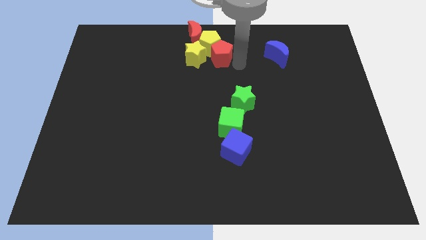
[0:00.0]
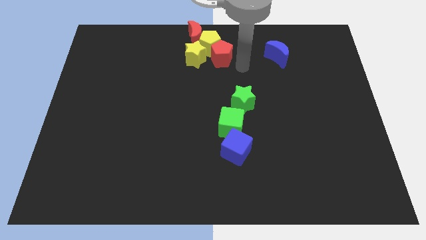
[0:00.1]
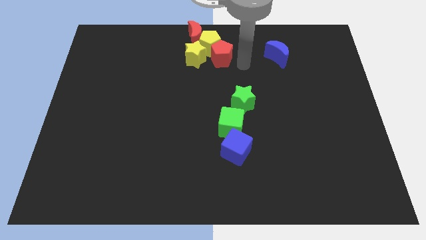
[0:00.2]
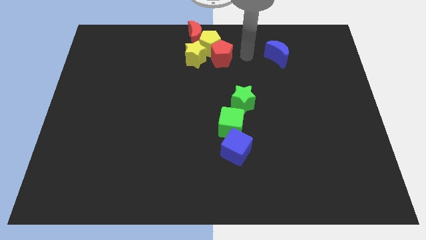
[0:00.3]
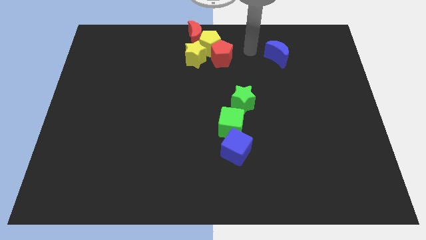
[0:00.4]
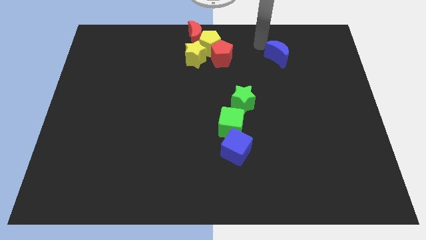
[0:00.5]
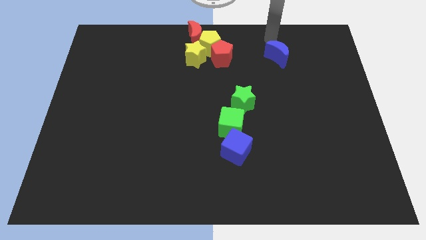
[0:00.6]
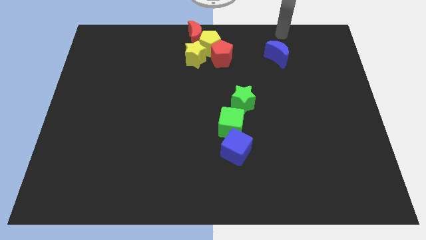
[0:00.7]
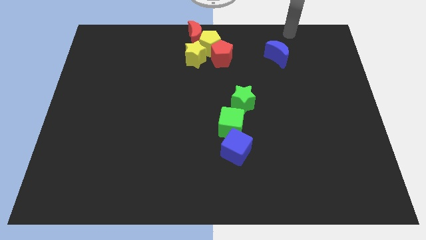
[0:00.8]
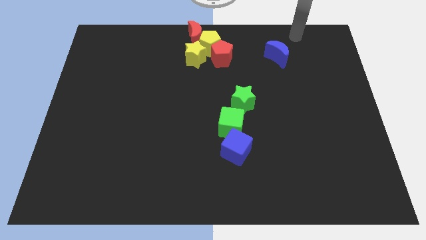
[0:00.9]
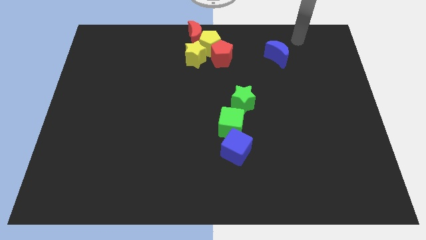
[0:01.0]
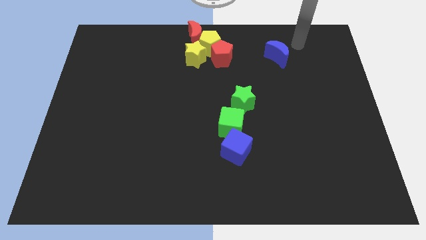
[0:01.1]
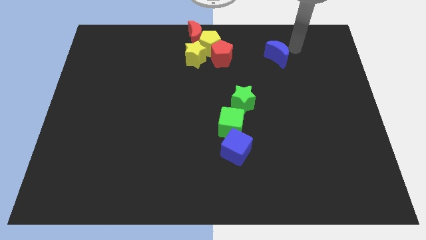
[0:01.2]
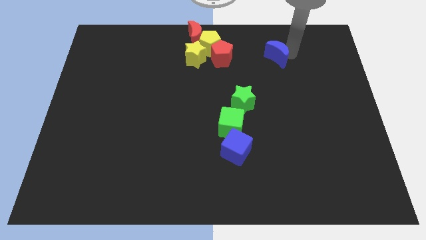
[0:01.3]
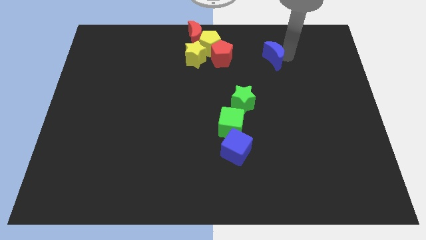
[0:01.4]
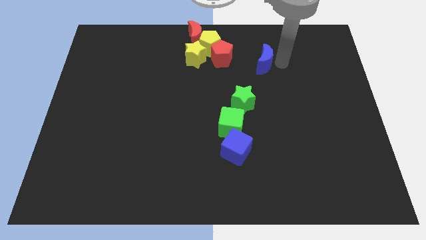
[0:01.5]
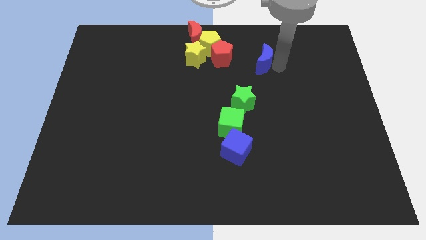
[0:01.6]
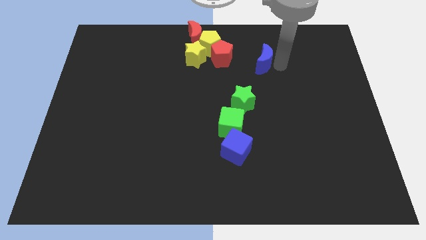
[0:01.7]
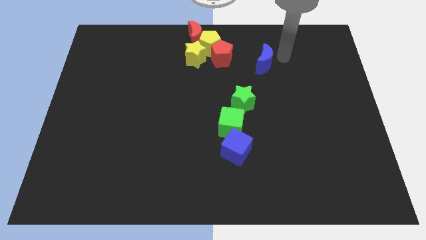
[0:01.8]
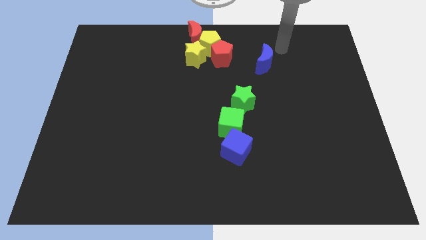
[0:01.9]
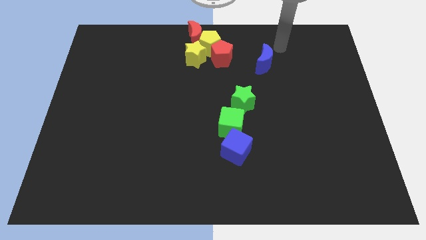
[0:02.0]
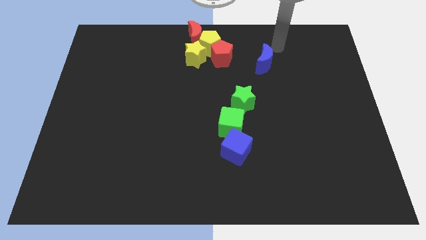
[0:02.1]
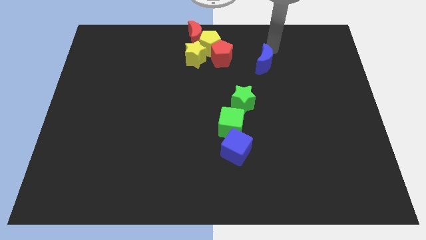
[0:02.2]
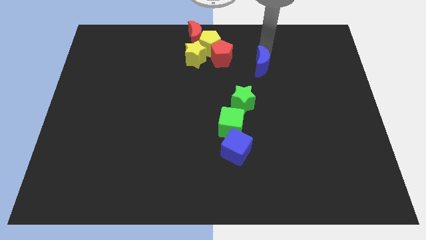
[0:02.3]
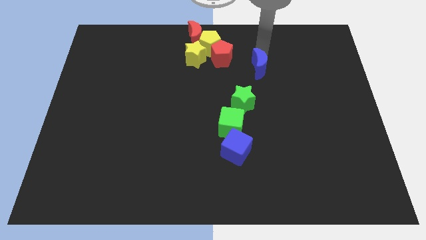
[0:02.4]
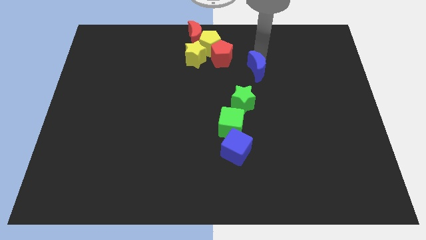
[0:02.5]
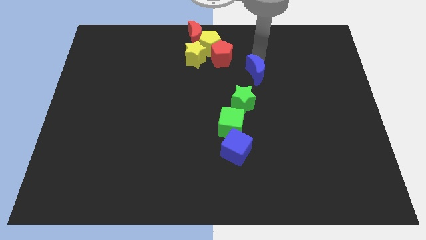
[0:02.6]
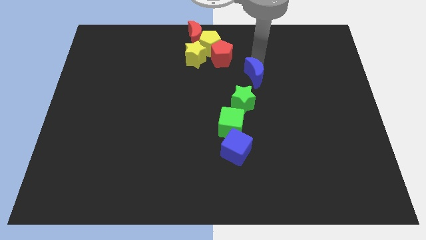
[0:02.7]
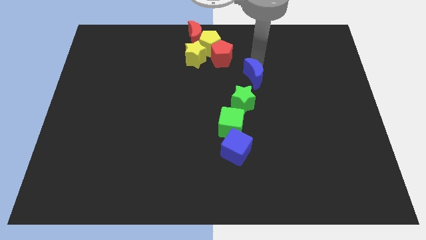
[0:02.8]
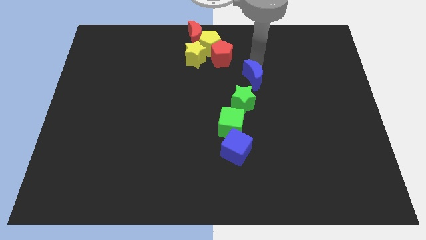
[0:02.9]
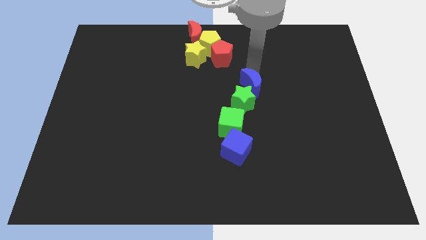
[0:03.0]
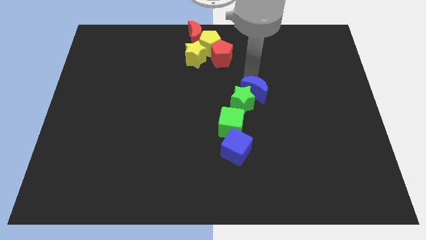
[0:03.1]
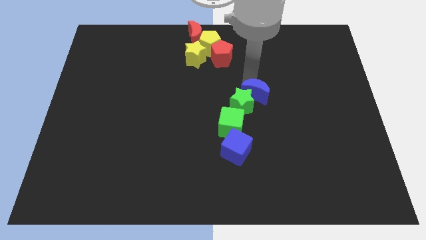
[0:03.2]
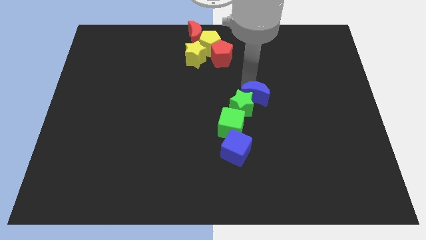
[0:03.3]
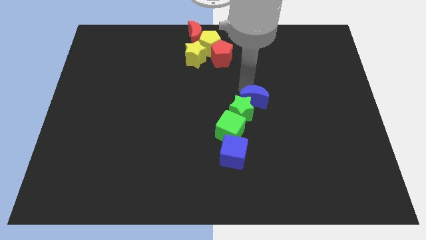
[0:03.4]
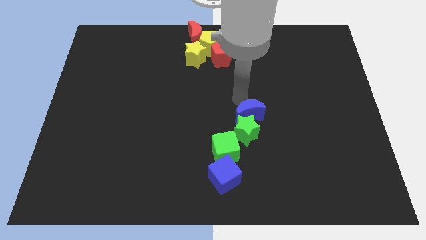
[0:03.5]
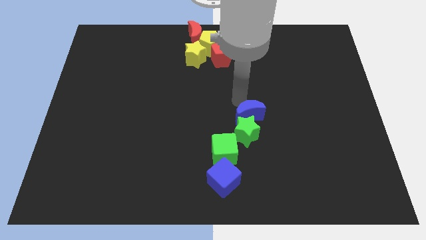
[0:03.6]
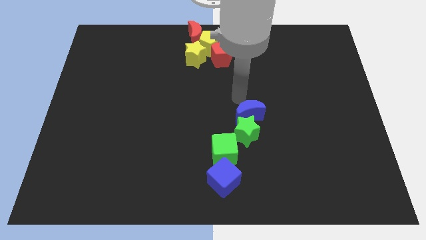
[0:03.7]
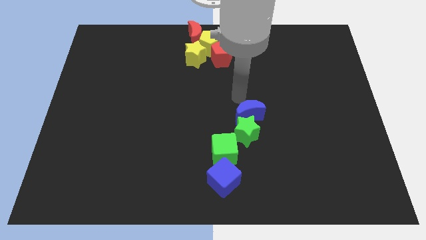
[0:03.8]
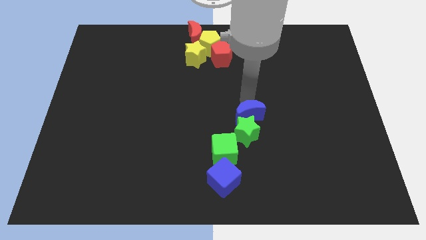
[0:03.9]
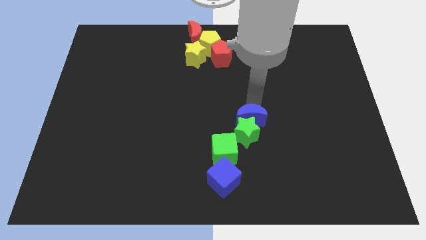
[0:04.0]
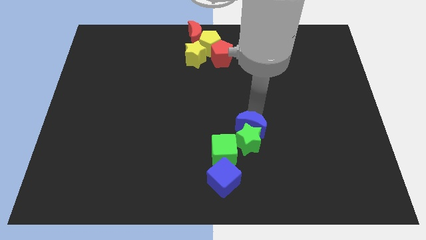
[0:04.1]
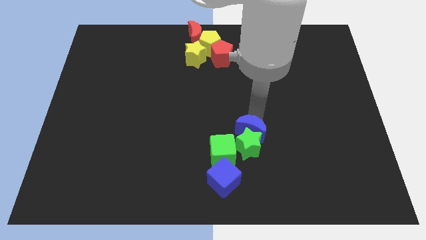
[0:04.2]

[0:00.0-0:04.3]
push the blue moon into the group of blocks

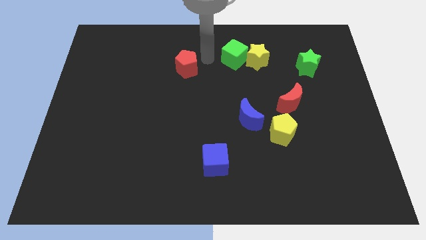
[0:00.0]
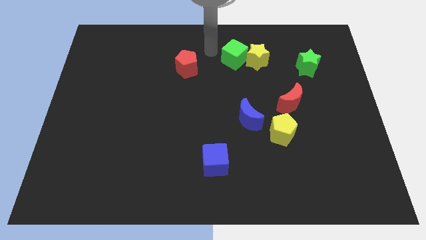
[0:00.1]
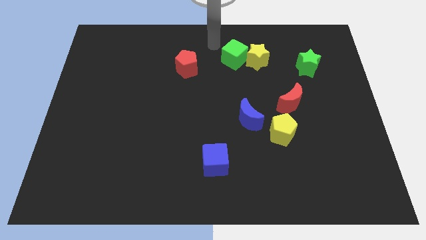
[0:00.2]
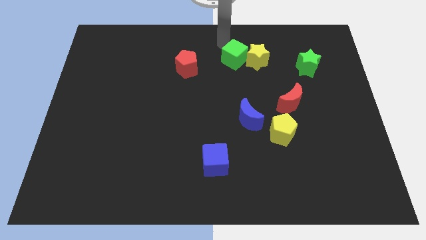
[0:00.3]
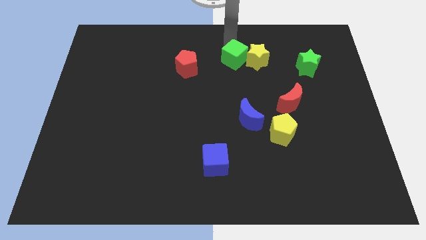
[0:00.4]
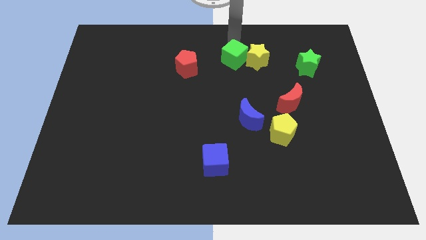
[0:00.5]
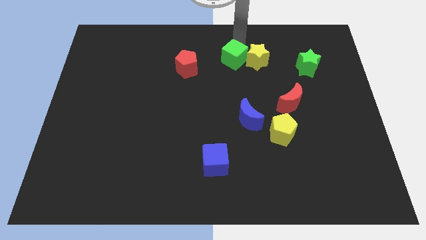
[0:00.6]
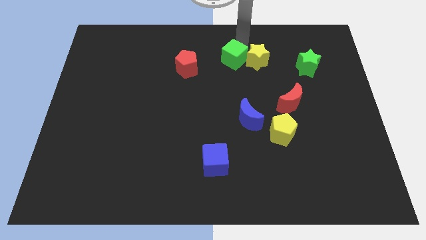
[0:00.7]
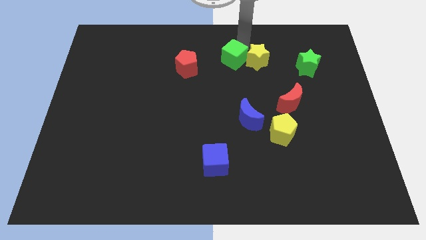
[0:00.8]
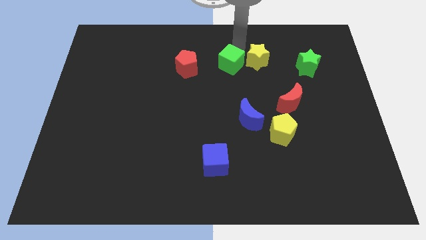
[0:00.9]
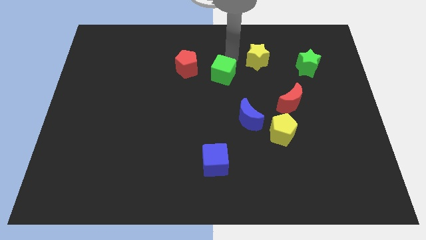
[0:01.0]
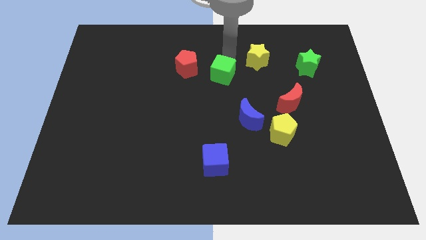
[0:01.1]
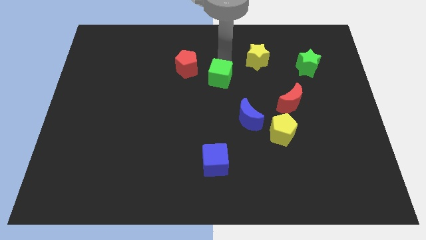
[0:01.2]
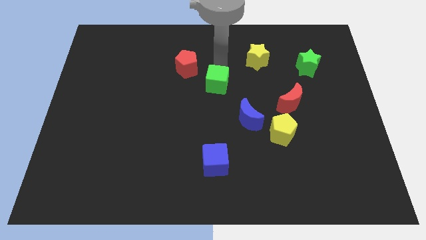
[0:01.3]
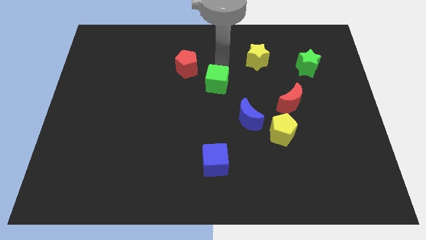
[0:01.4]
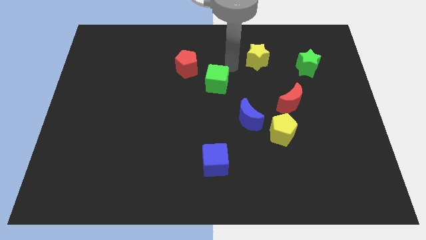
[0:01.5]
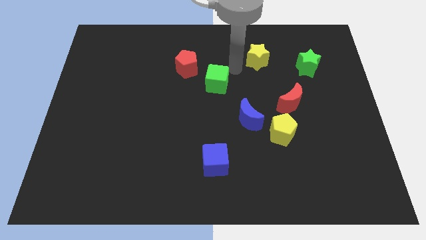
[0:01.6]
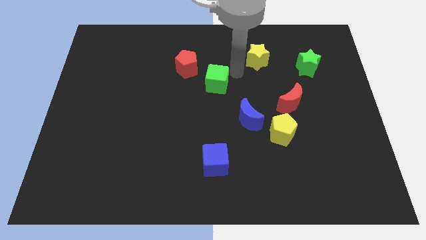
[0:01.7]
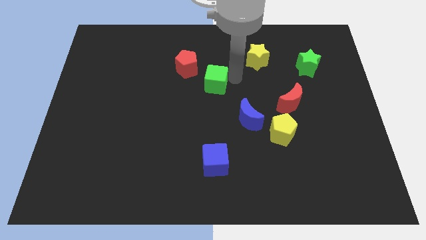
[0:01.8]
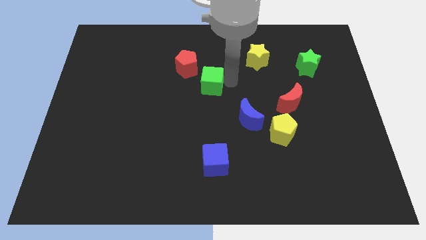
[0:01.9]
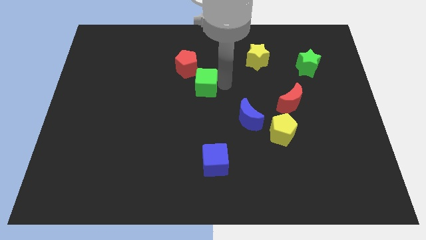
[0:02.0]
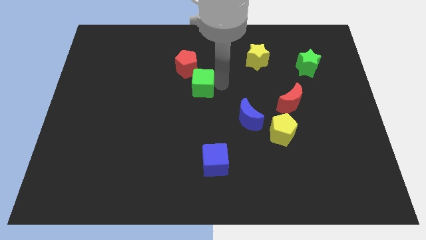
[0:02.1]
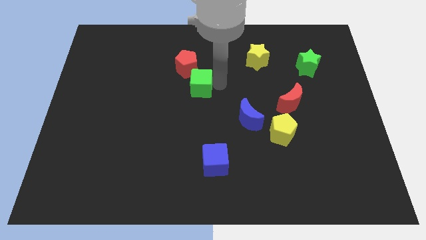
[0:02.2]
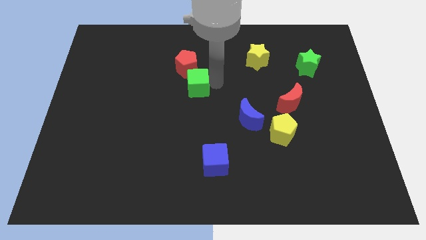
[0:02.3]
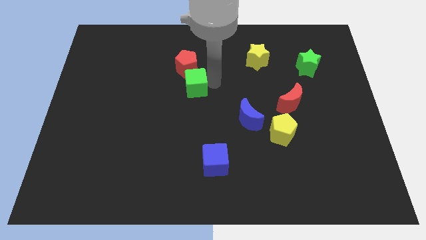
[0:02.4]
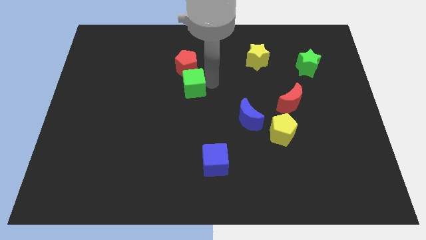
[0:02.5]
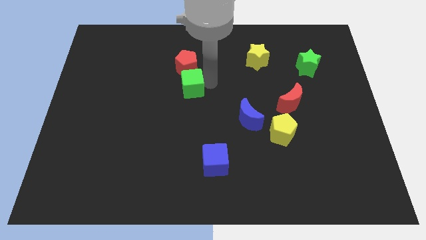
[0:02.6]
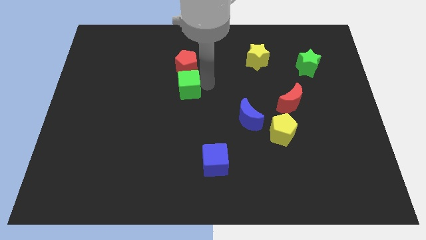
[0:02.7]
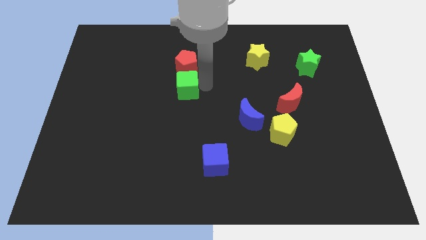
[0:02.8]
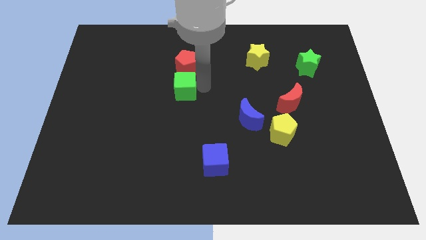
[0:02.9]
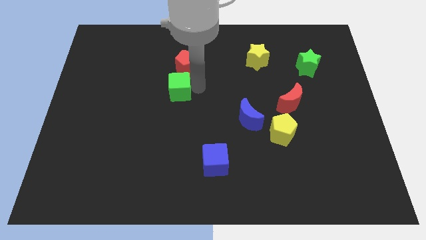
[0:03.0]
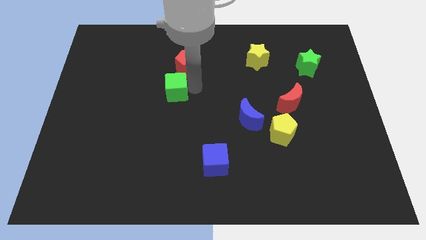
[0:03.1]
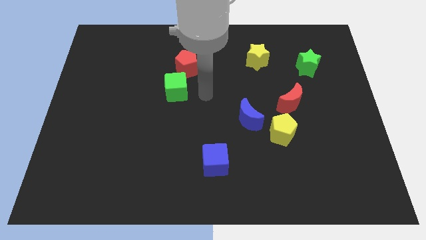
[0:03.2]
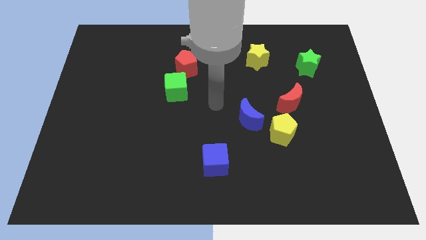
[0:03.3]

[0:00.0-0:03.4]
place green cube to the bottom of the red pentagon

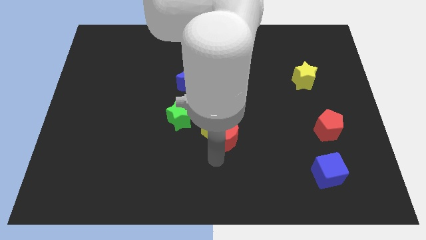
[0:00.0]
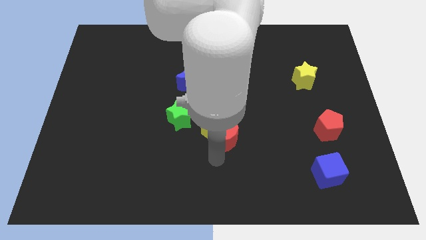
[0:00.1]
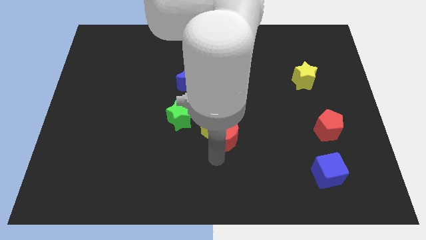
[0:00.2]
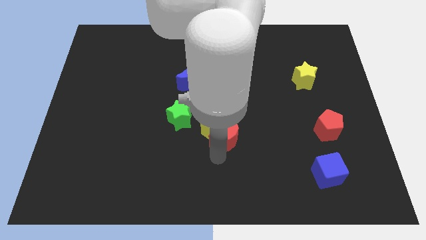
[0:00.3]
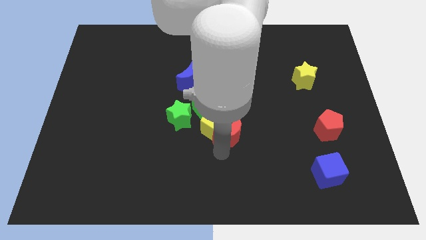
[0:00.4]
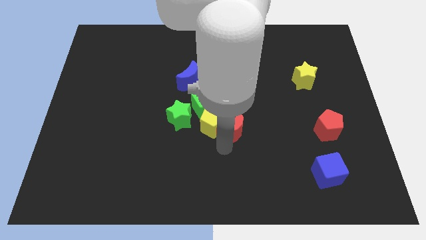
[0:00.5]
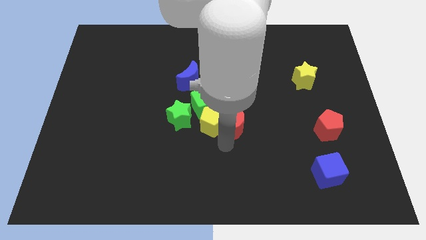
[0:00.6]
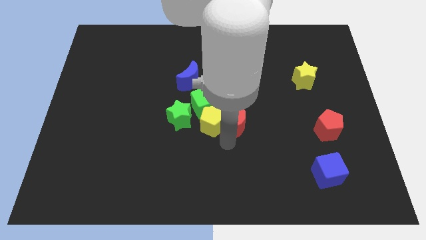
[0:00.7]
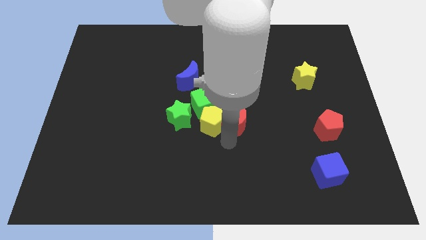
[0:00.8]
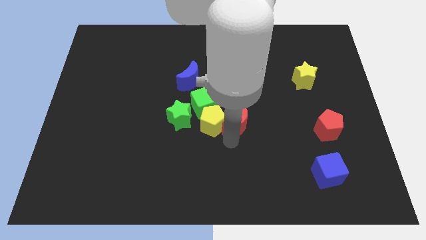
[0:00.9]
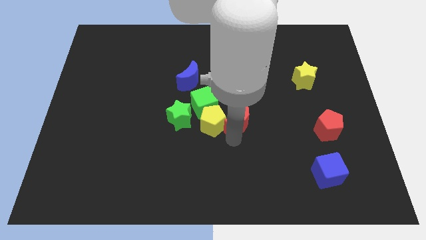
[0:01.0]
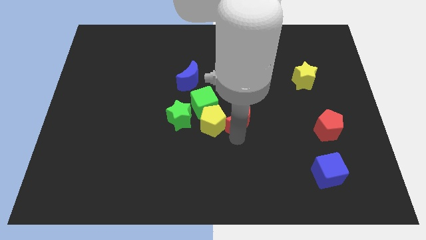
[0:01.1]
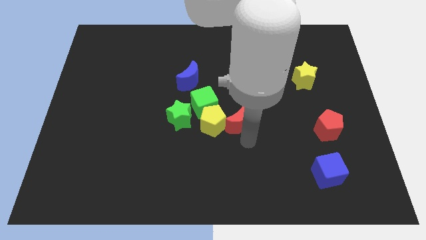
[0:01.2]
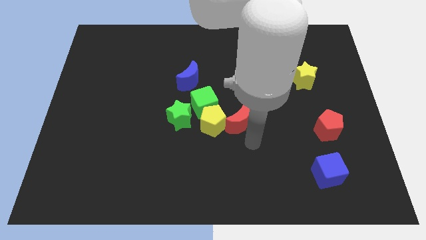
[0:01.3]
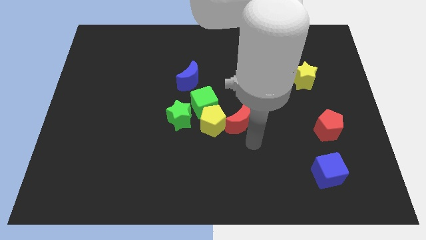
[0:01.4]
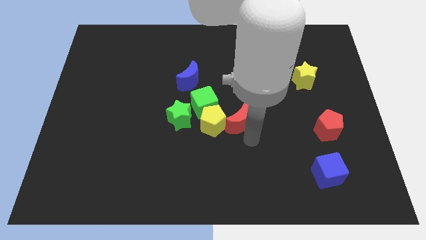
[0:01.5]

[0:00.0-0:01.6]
drag the red moon slightly to the left of yellow pentagon
